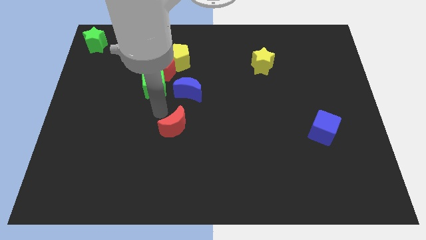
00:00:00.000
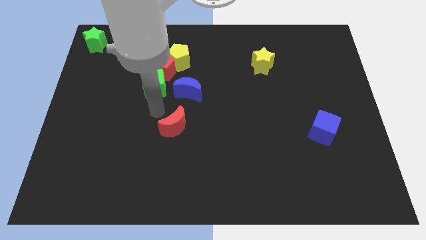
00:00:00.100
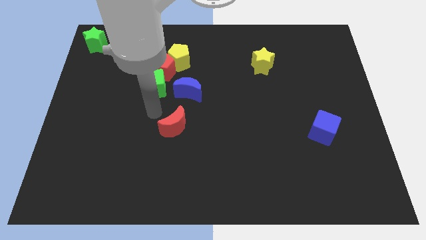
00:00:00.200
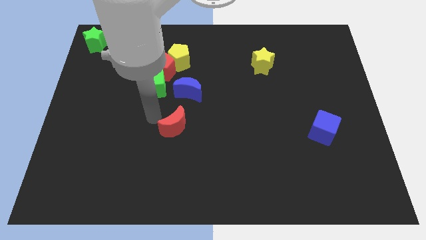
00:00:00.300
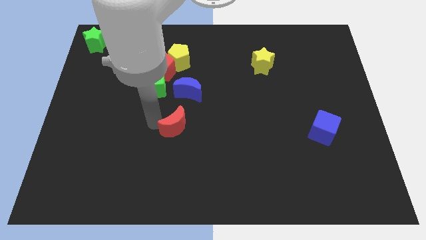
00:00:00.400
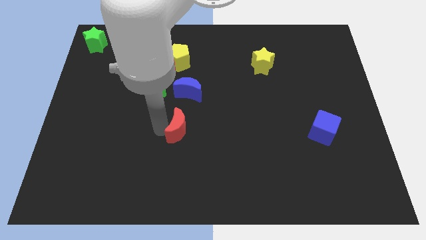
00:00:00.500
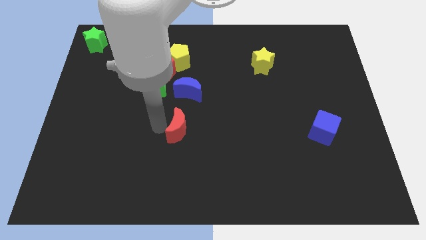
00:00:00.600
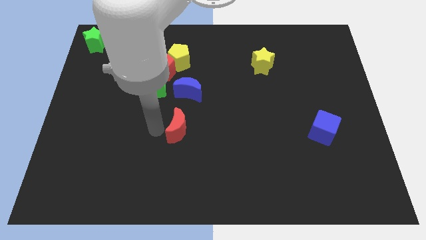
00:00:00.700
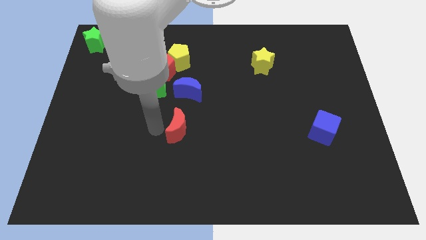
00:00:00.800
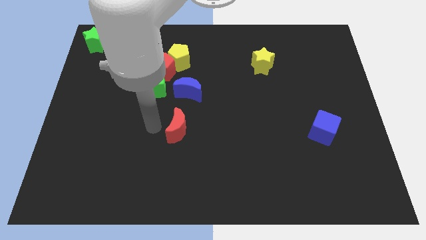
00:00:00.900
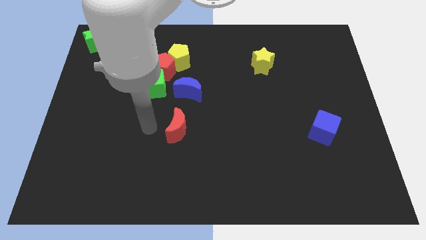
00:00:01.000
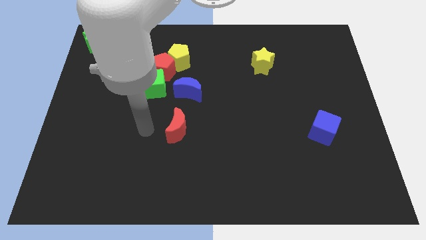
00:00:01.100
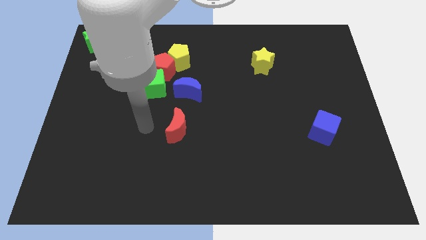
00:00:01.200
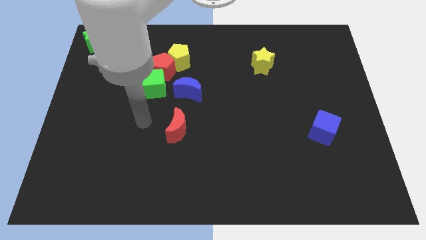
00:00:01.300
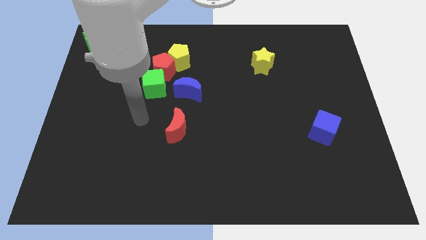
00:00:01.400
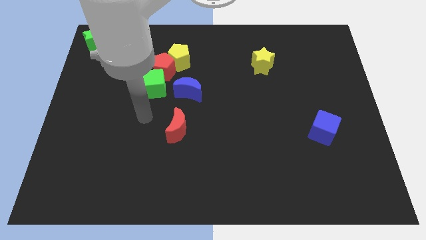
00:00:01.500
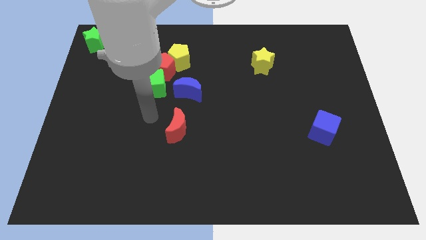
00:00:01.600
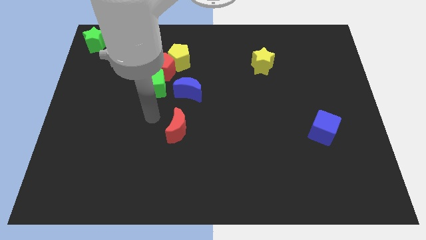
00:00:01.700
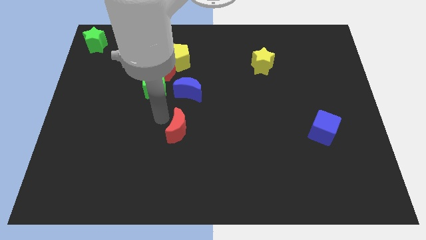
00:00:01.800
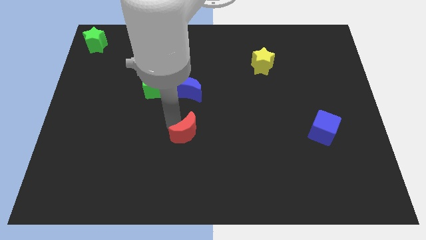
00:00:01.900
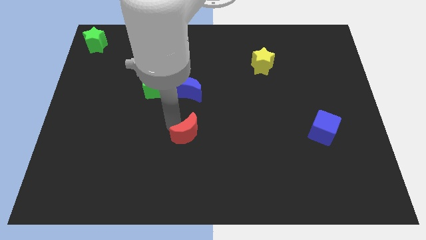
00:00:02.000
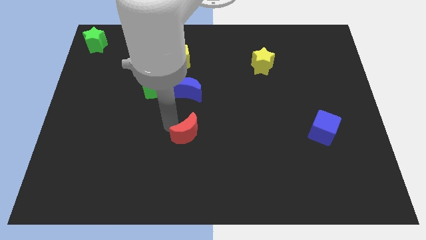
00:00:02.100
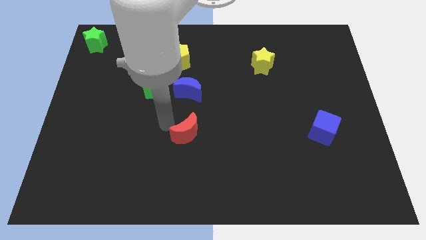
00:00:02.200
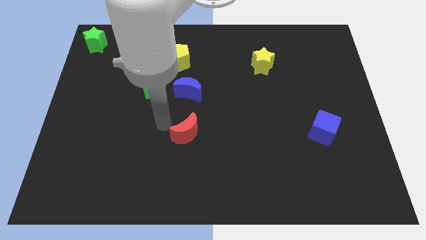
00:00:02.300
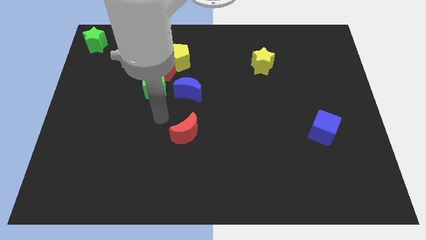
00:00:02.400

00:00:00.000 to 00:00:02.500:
move the red crescent parallel to the bottom of the blue crescent

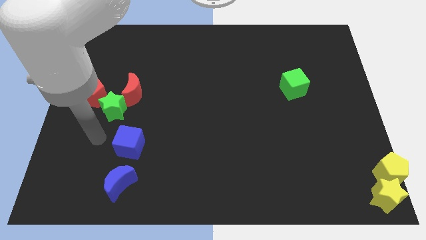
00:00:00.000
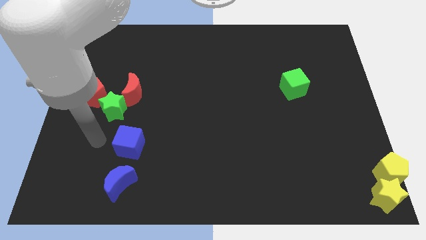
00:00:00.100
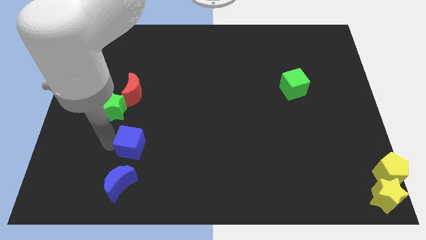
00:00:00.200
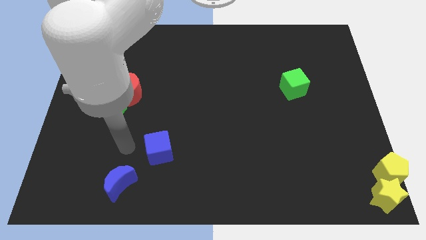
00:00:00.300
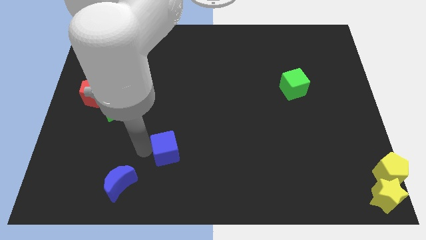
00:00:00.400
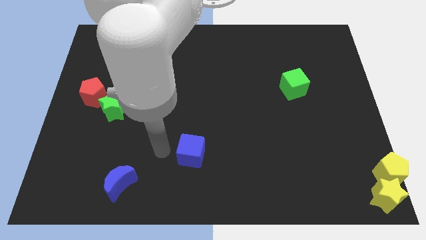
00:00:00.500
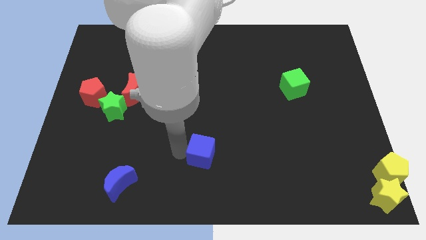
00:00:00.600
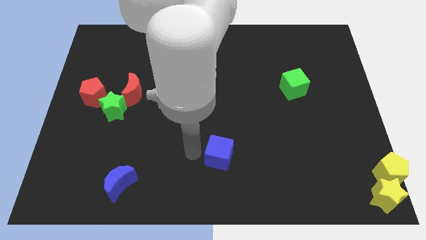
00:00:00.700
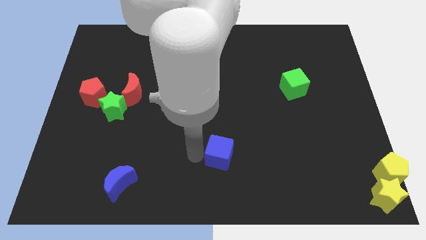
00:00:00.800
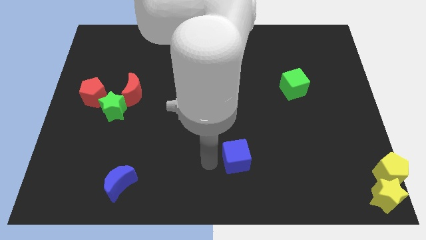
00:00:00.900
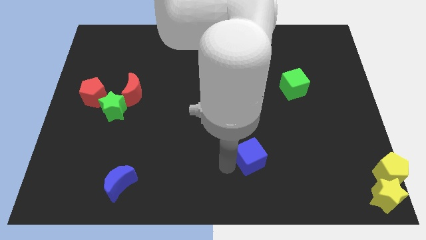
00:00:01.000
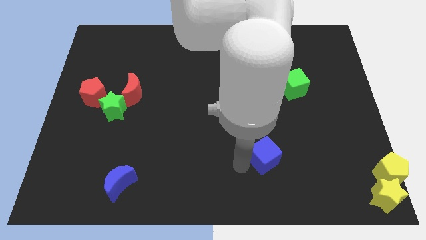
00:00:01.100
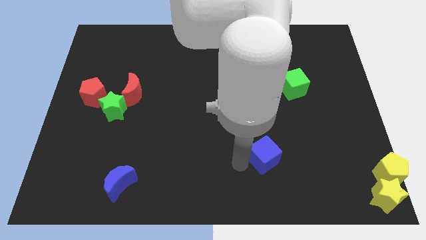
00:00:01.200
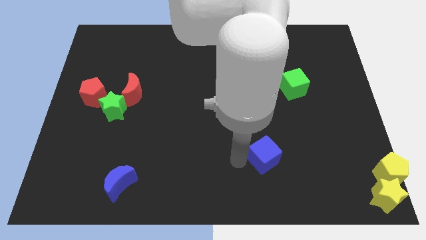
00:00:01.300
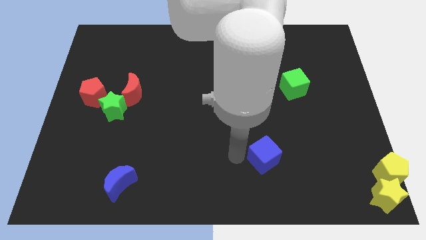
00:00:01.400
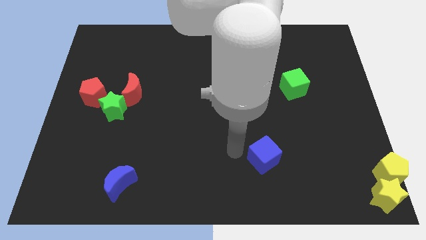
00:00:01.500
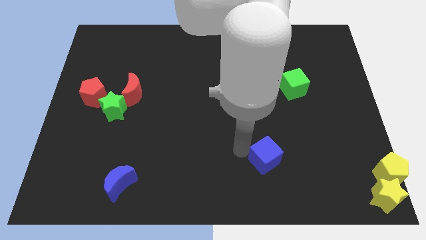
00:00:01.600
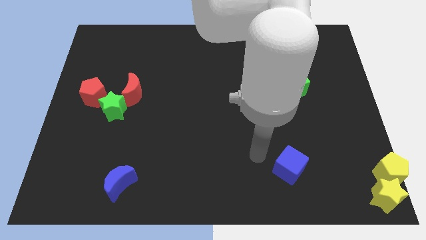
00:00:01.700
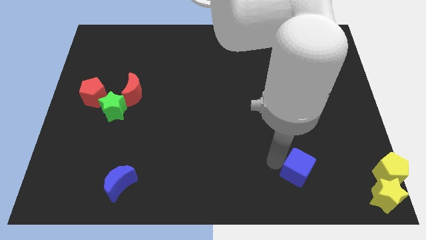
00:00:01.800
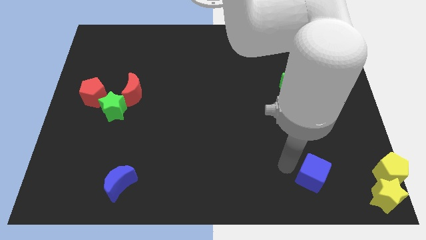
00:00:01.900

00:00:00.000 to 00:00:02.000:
place the blue cube vertically below the green cube

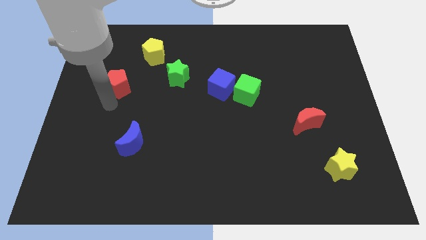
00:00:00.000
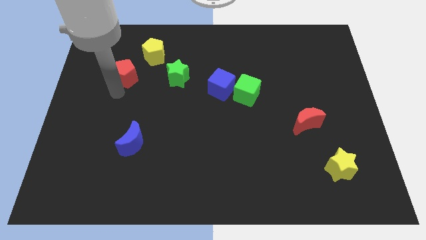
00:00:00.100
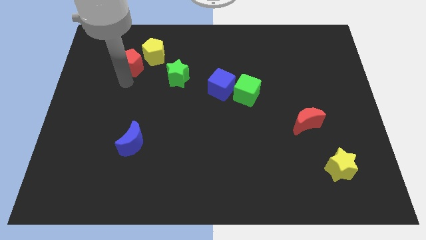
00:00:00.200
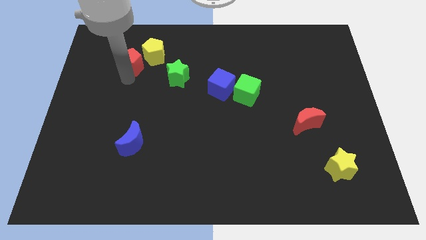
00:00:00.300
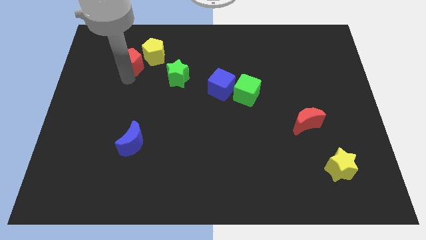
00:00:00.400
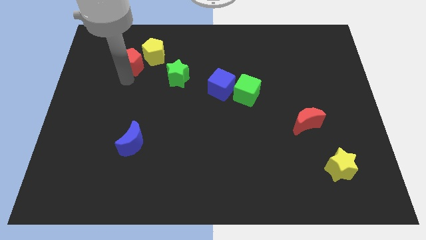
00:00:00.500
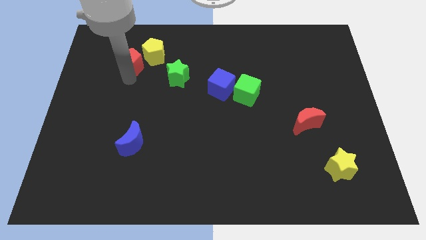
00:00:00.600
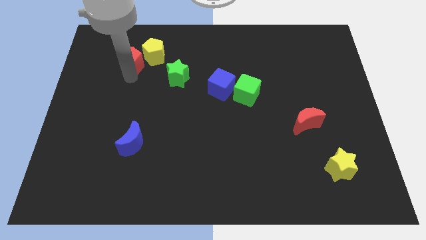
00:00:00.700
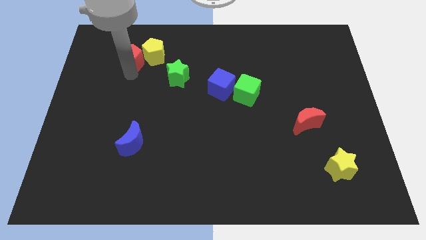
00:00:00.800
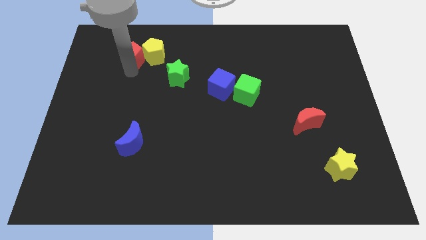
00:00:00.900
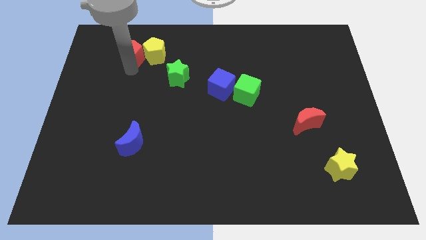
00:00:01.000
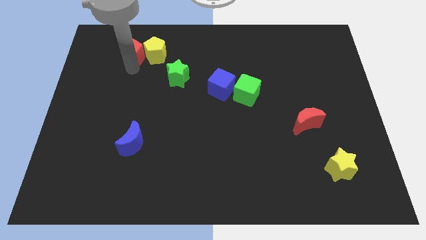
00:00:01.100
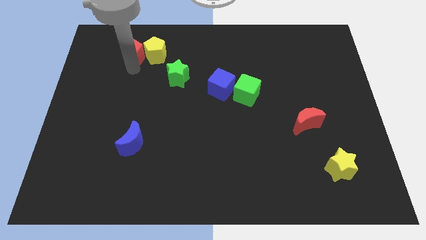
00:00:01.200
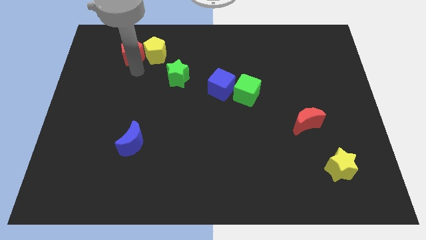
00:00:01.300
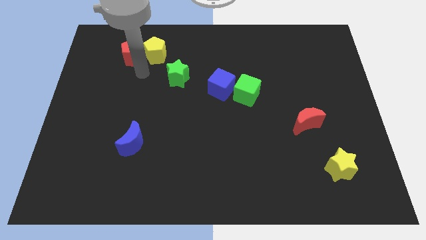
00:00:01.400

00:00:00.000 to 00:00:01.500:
move the red pentagon to the left side of the yellow pentagon

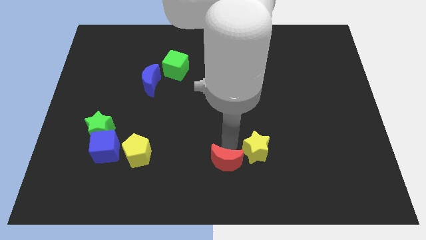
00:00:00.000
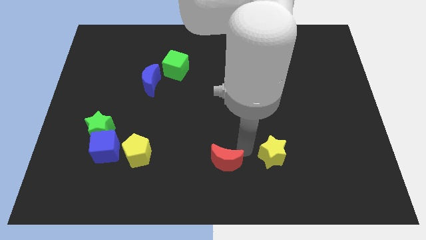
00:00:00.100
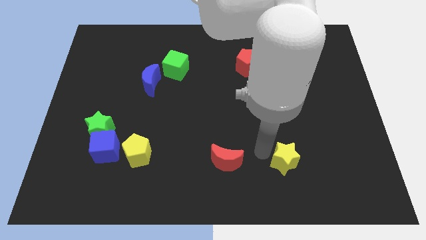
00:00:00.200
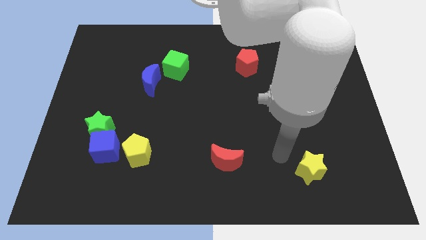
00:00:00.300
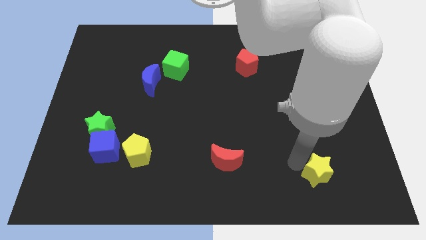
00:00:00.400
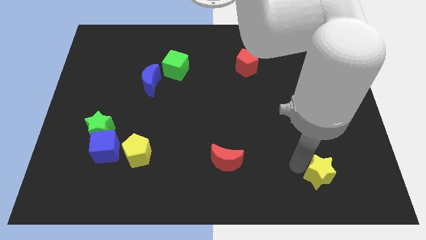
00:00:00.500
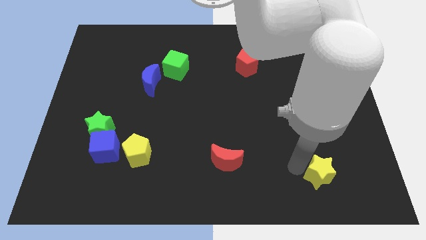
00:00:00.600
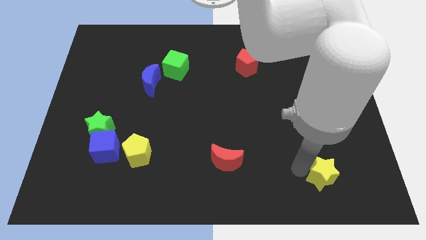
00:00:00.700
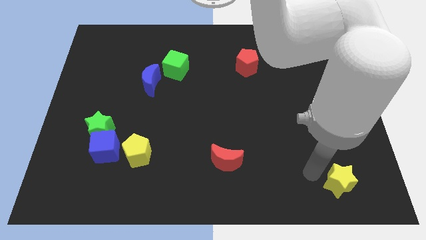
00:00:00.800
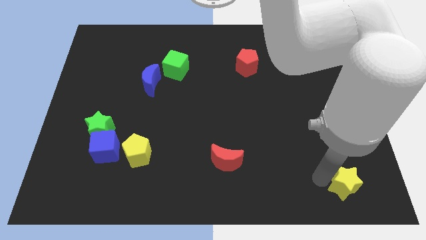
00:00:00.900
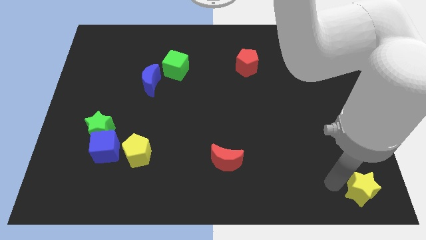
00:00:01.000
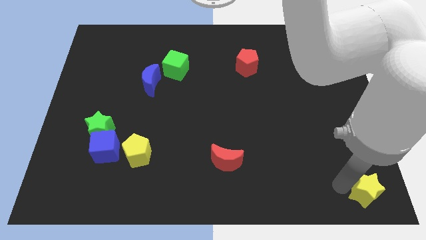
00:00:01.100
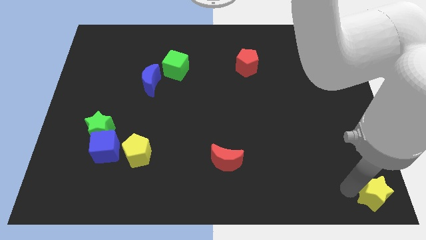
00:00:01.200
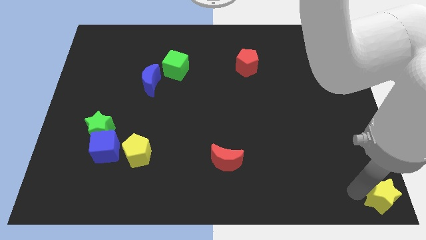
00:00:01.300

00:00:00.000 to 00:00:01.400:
push the yellow star to the bottom right corner

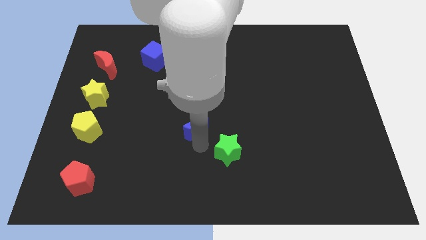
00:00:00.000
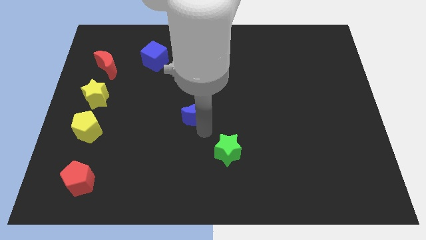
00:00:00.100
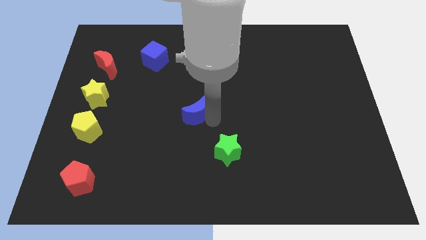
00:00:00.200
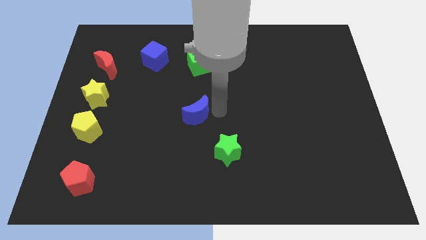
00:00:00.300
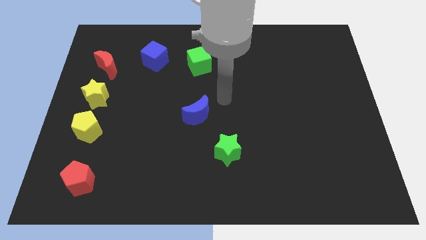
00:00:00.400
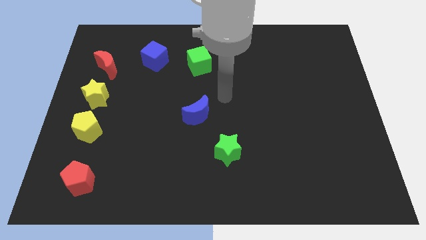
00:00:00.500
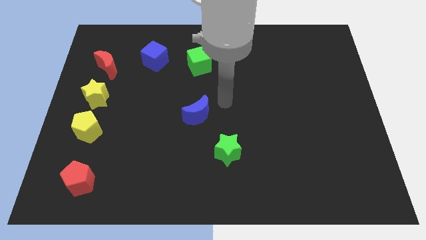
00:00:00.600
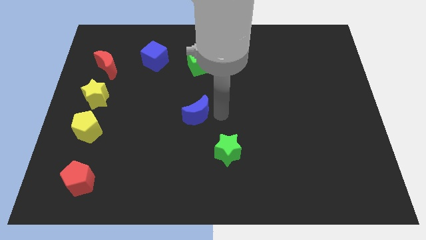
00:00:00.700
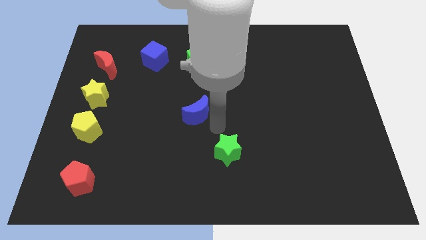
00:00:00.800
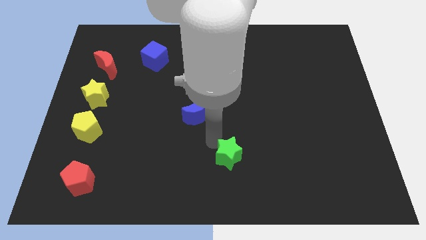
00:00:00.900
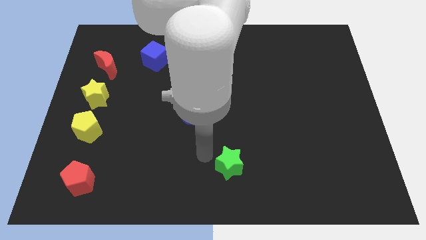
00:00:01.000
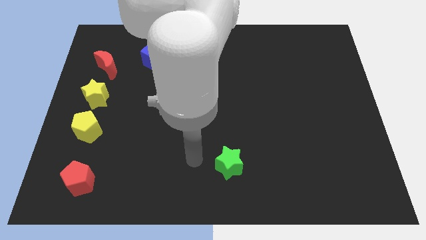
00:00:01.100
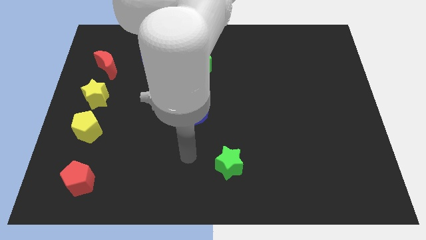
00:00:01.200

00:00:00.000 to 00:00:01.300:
separate the green star and blue moon
